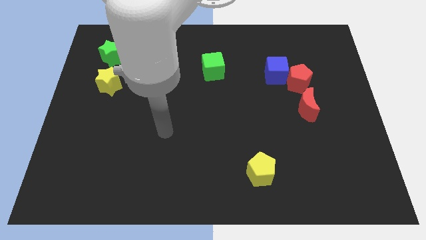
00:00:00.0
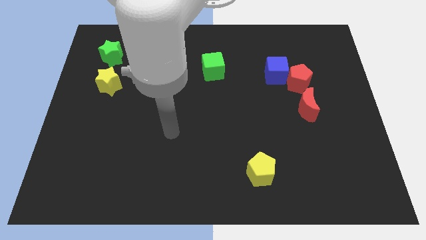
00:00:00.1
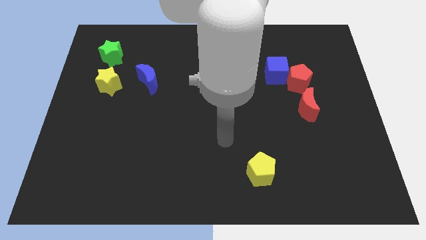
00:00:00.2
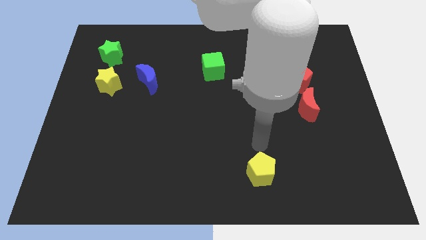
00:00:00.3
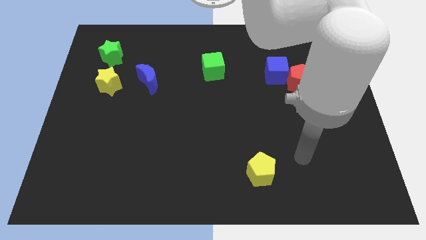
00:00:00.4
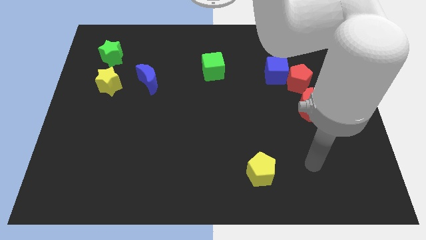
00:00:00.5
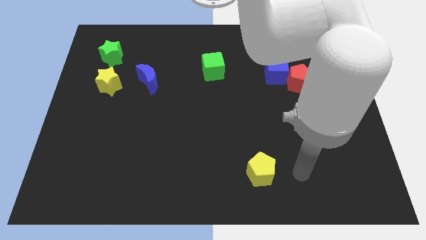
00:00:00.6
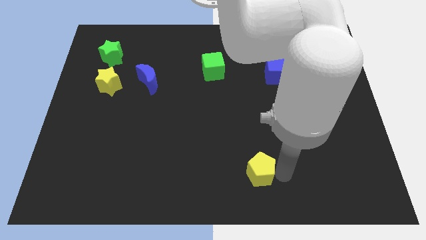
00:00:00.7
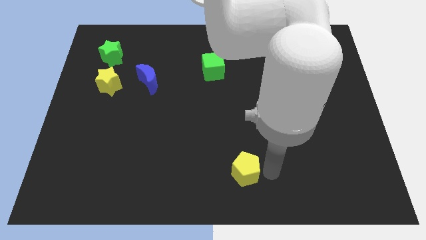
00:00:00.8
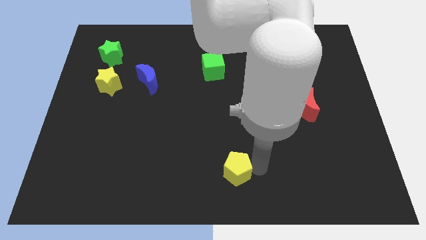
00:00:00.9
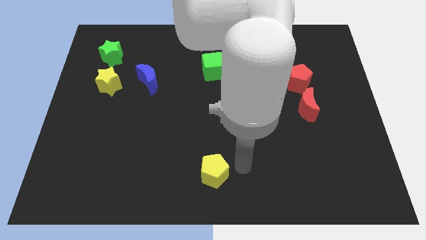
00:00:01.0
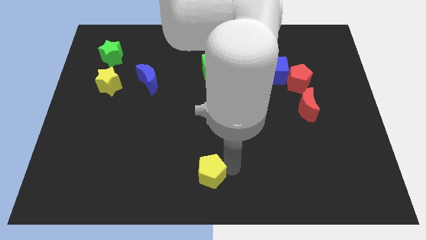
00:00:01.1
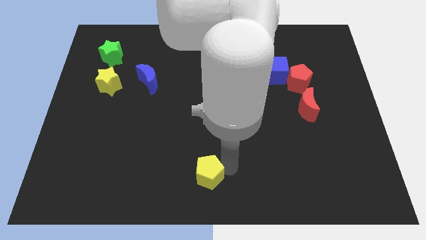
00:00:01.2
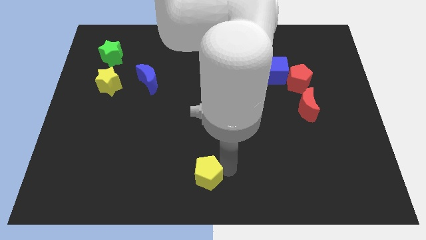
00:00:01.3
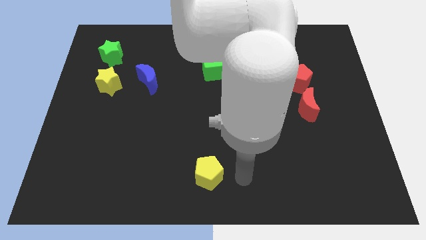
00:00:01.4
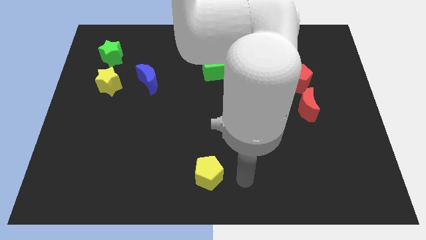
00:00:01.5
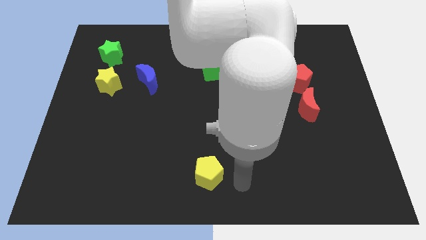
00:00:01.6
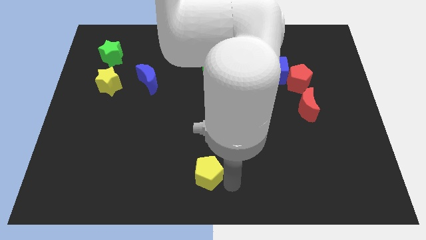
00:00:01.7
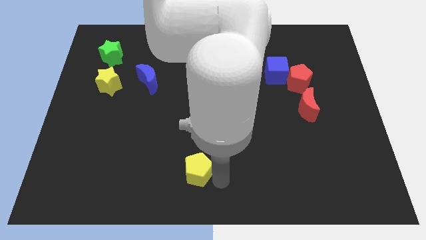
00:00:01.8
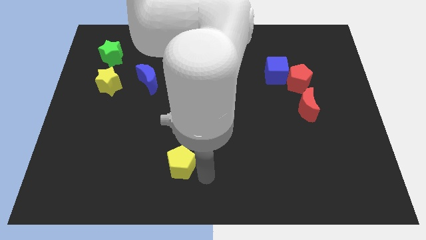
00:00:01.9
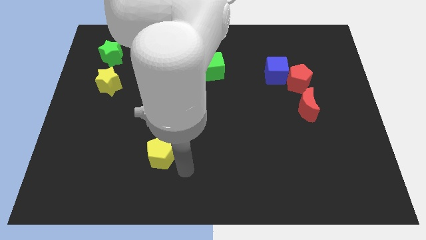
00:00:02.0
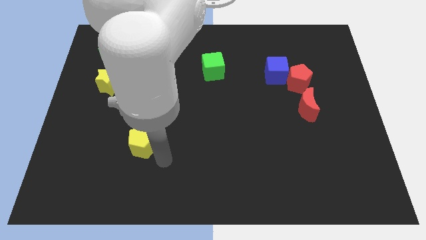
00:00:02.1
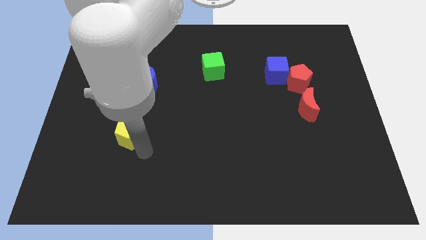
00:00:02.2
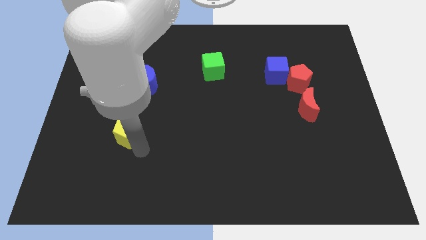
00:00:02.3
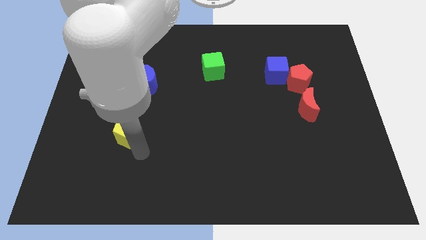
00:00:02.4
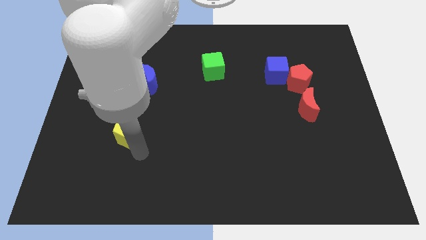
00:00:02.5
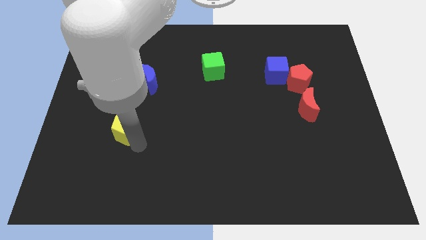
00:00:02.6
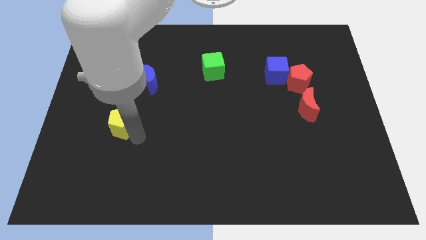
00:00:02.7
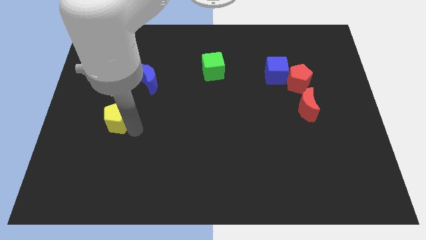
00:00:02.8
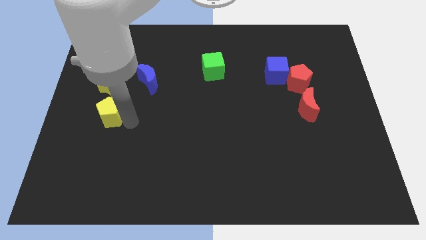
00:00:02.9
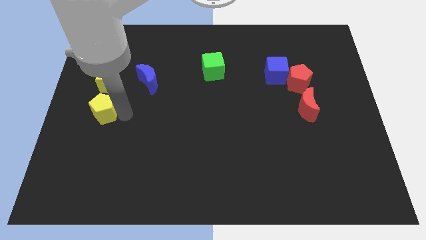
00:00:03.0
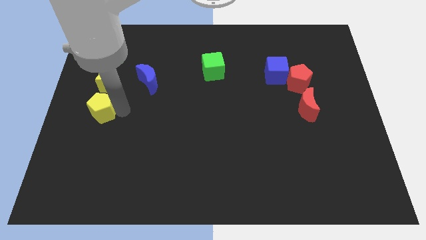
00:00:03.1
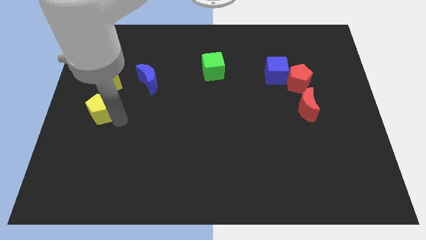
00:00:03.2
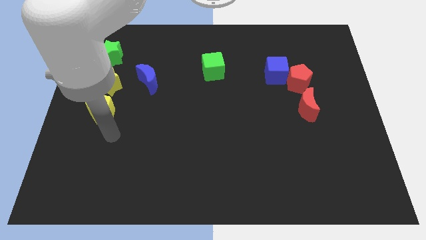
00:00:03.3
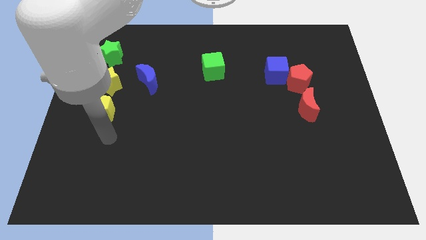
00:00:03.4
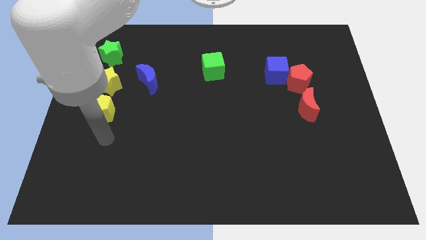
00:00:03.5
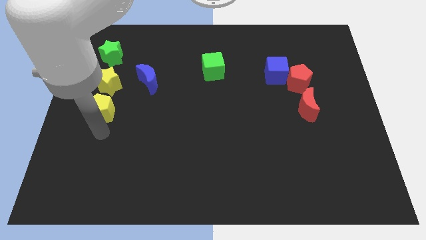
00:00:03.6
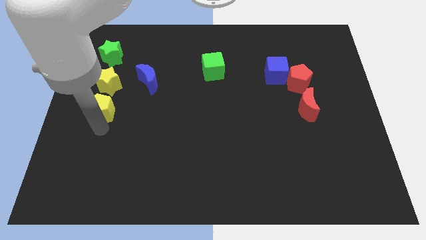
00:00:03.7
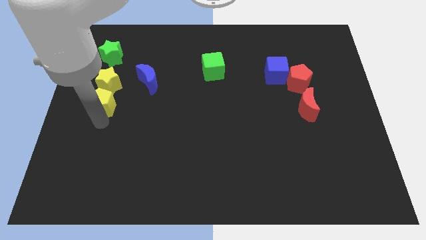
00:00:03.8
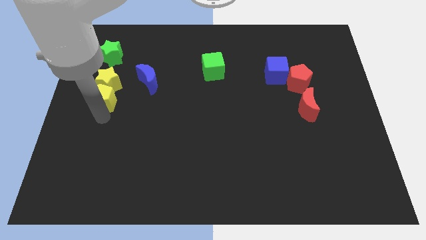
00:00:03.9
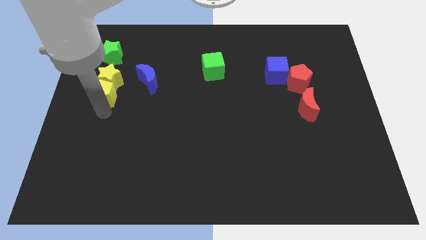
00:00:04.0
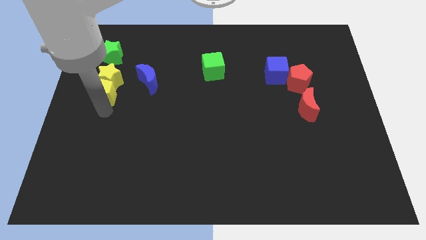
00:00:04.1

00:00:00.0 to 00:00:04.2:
move the yellow pentagon towards the yellow star

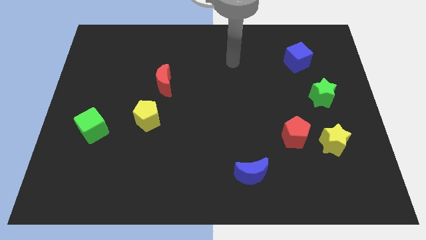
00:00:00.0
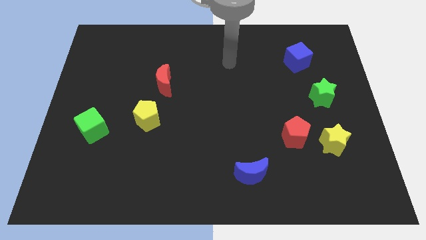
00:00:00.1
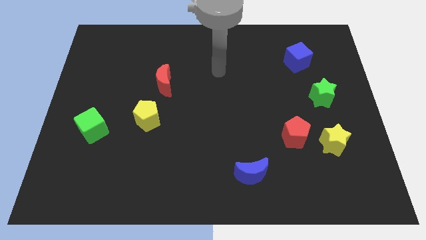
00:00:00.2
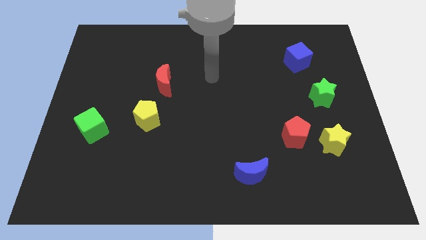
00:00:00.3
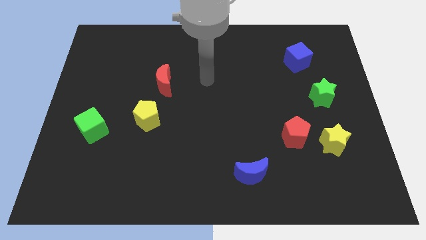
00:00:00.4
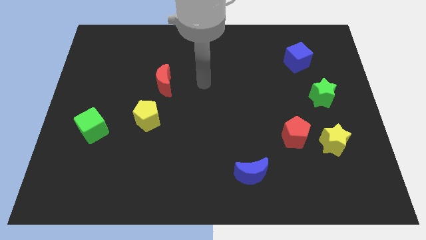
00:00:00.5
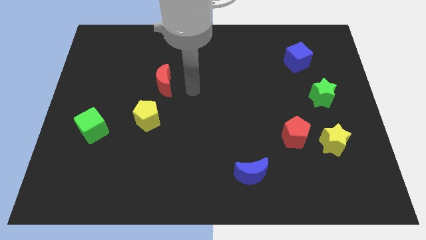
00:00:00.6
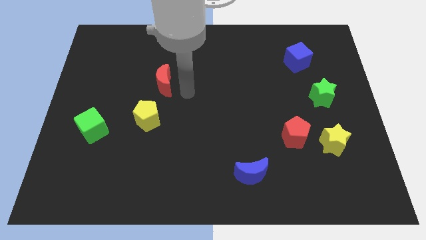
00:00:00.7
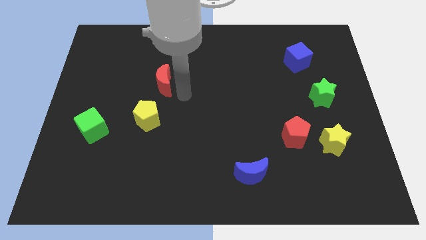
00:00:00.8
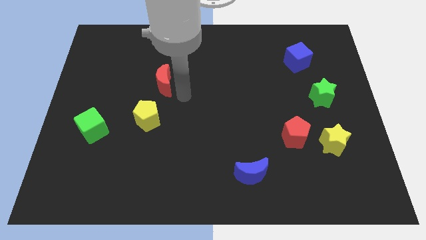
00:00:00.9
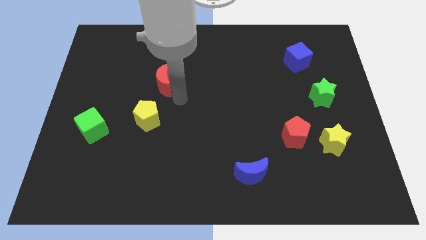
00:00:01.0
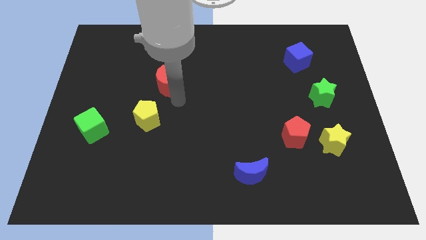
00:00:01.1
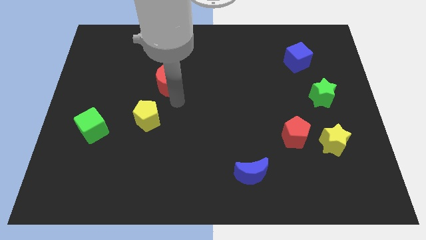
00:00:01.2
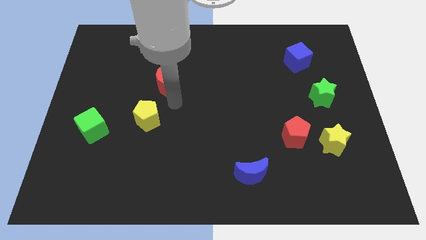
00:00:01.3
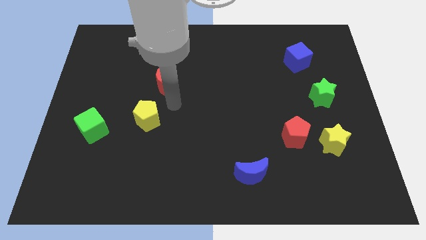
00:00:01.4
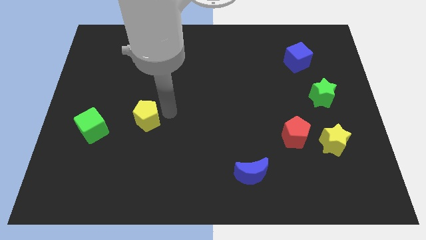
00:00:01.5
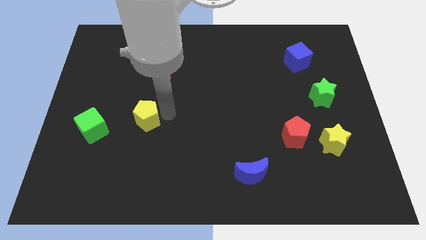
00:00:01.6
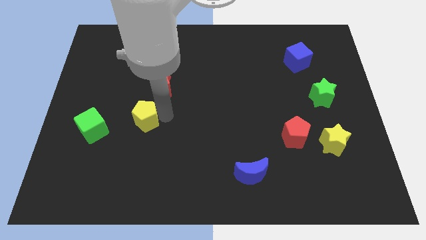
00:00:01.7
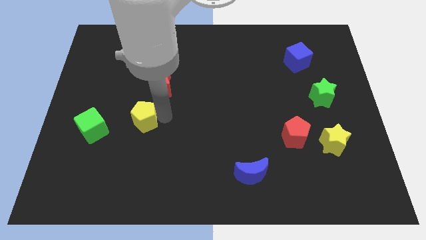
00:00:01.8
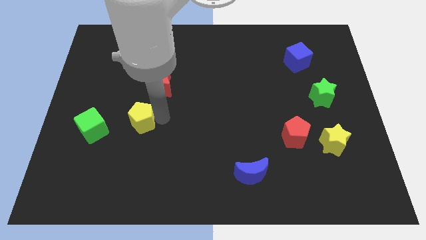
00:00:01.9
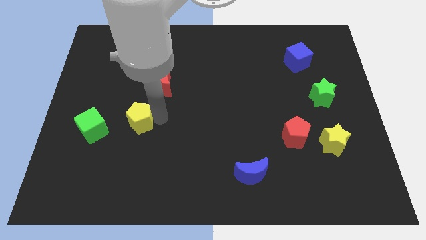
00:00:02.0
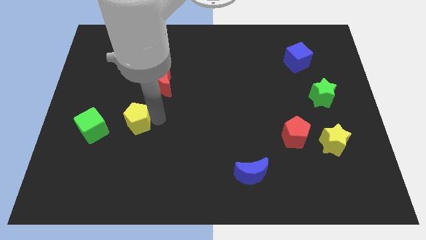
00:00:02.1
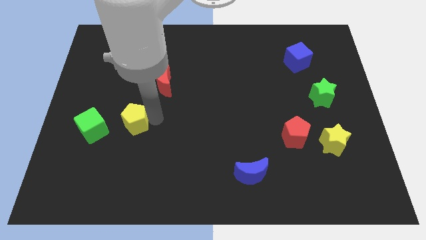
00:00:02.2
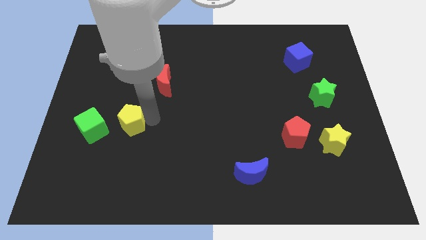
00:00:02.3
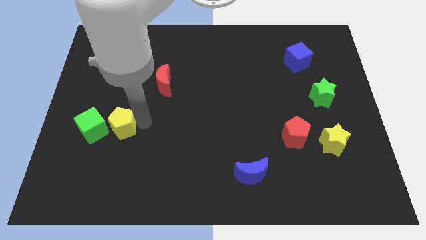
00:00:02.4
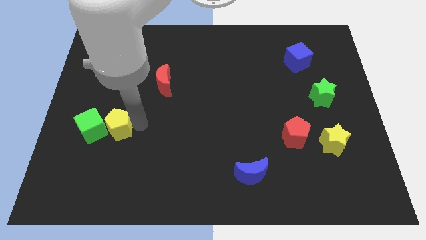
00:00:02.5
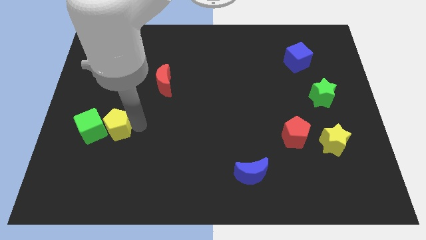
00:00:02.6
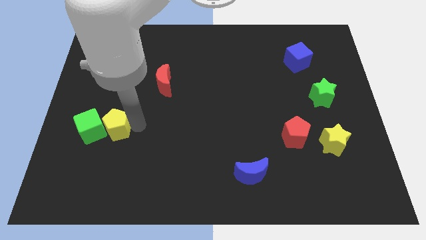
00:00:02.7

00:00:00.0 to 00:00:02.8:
put the yellow pentagon close to the green cube

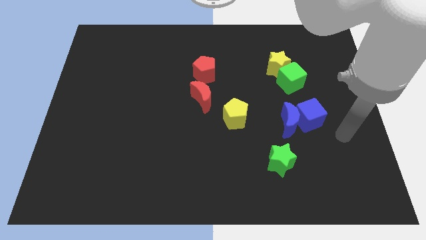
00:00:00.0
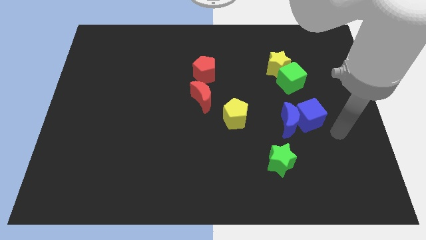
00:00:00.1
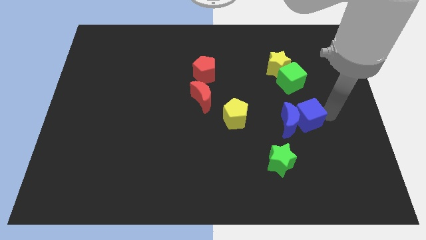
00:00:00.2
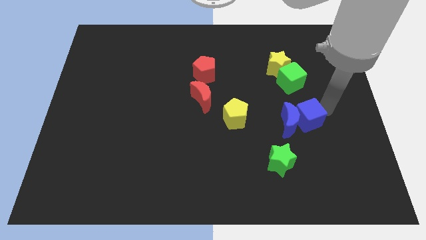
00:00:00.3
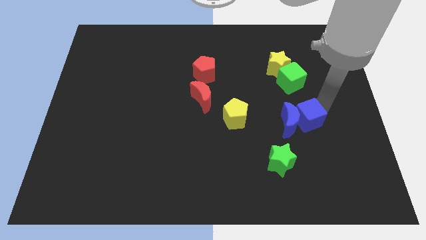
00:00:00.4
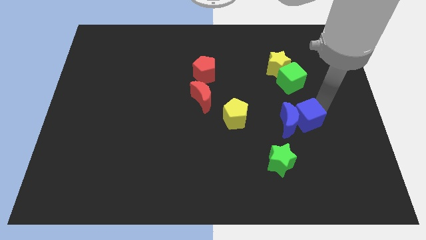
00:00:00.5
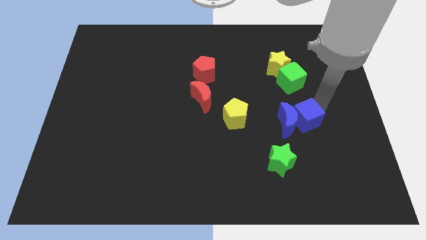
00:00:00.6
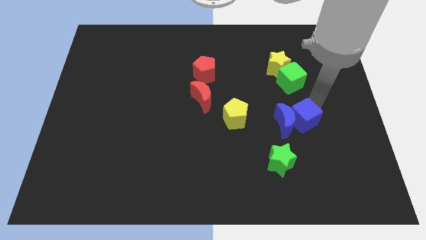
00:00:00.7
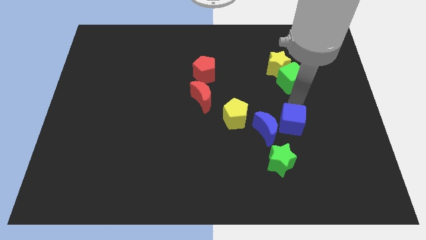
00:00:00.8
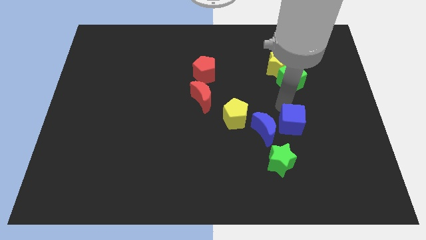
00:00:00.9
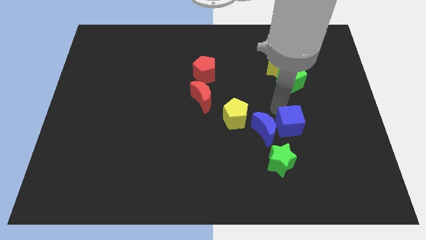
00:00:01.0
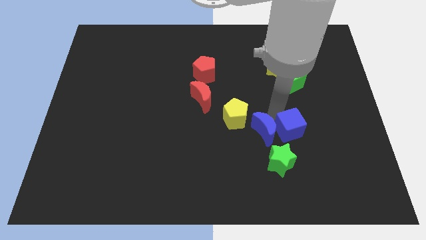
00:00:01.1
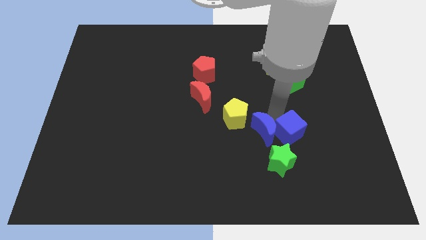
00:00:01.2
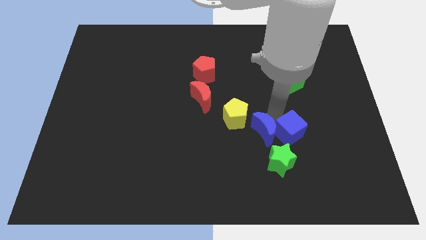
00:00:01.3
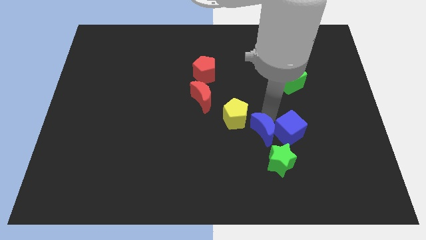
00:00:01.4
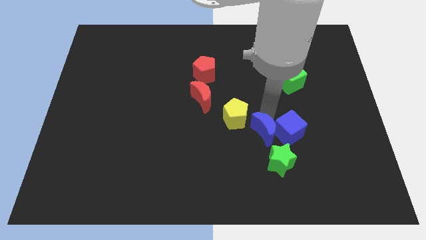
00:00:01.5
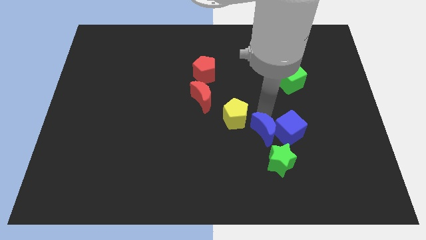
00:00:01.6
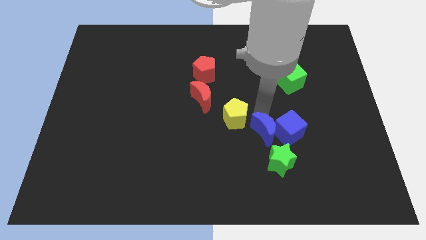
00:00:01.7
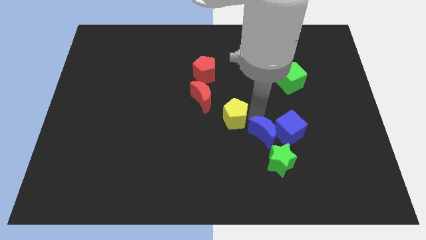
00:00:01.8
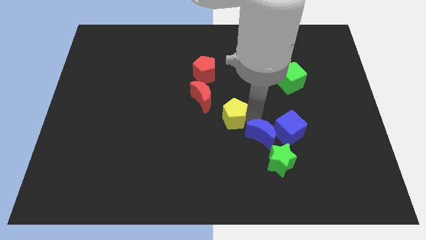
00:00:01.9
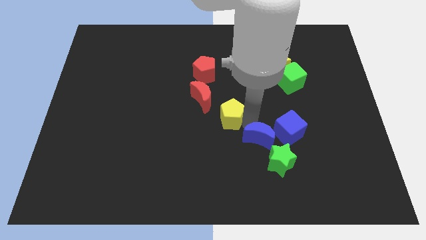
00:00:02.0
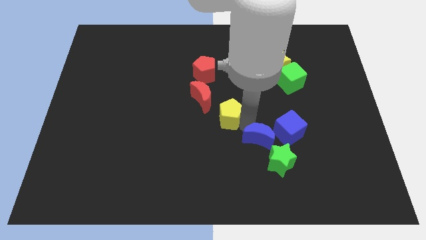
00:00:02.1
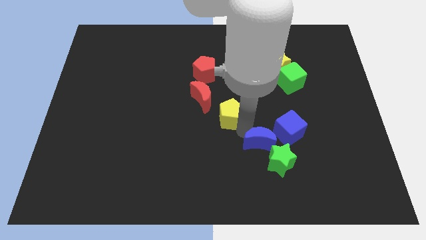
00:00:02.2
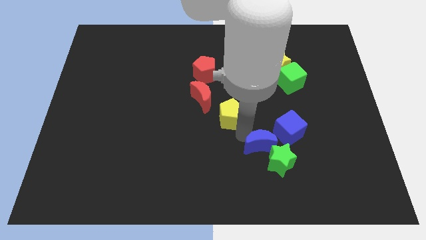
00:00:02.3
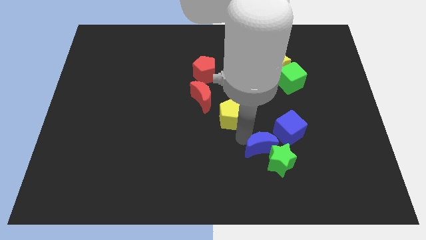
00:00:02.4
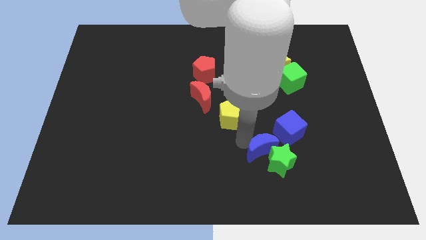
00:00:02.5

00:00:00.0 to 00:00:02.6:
push the blue moon towards the green star
